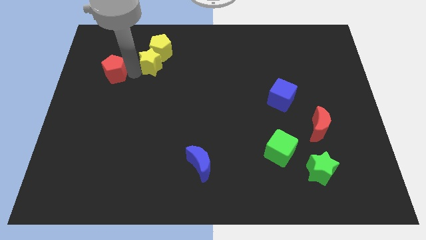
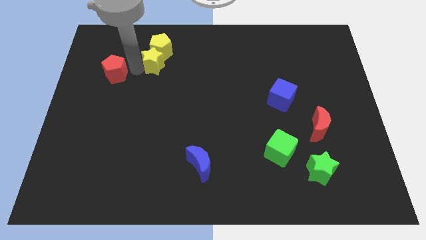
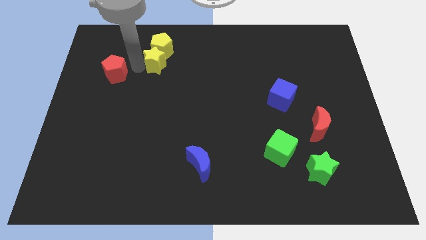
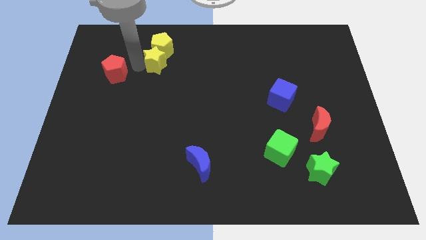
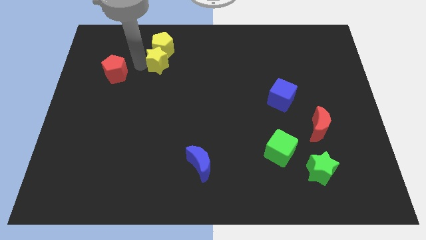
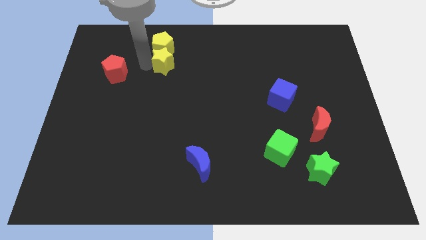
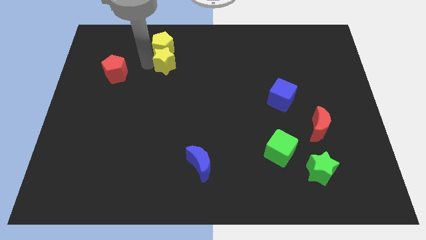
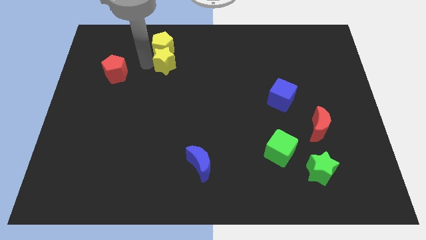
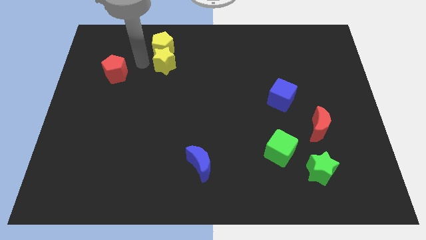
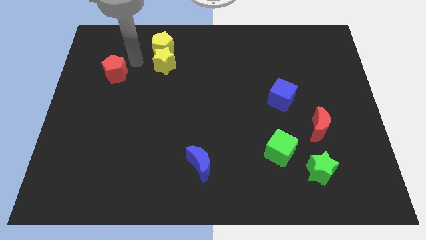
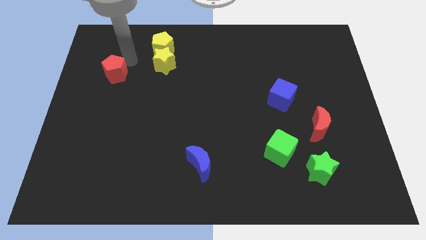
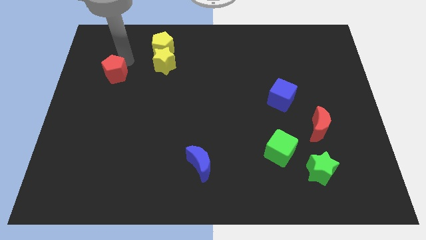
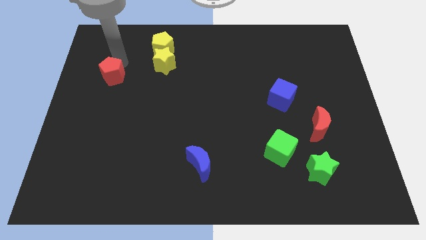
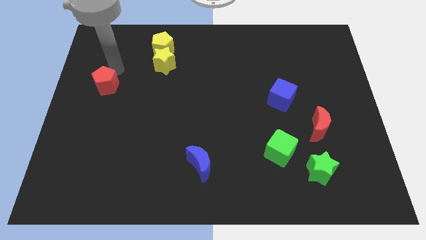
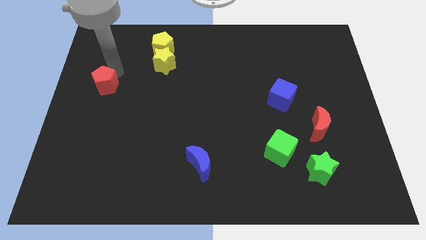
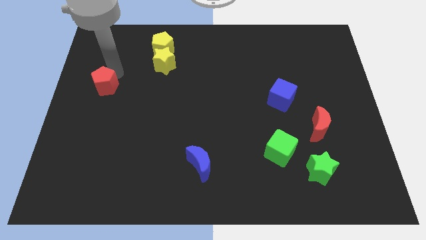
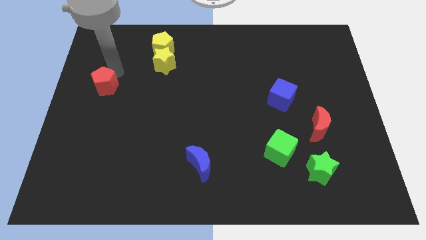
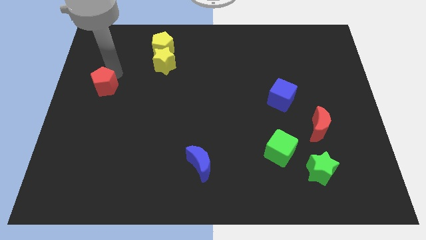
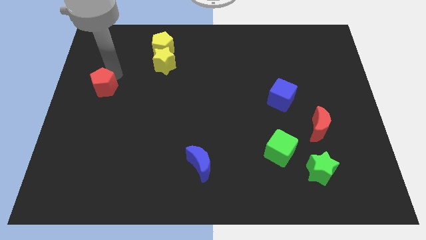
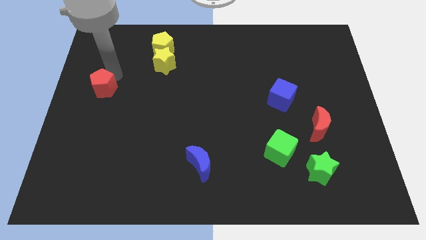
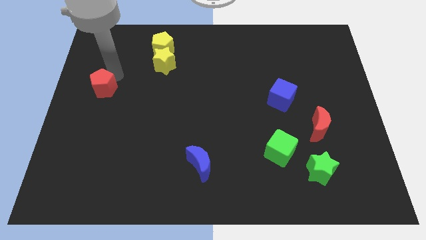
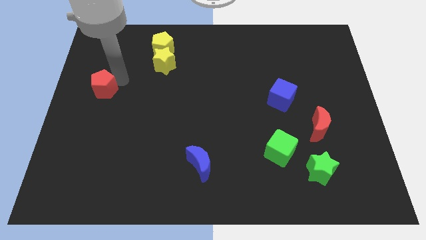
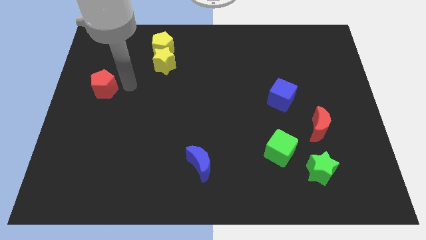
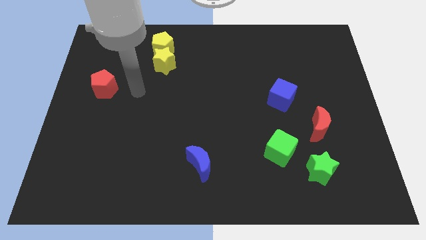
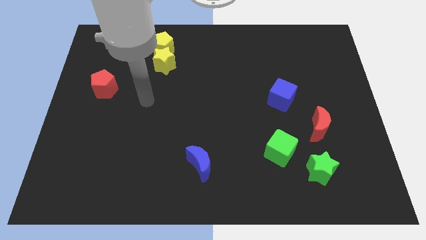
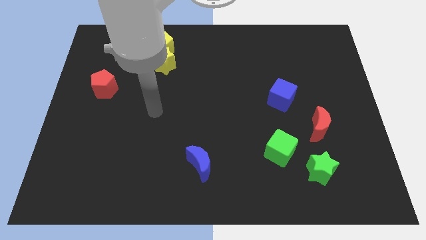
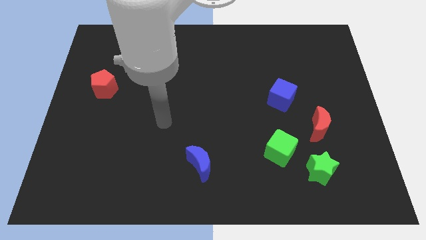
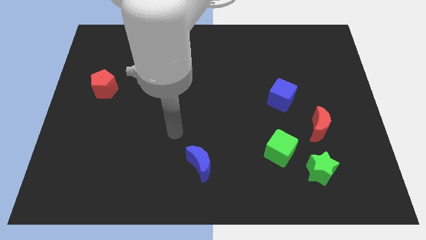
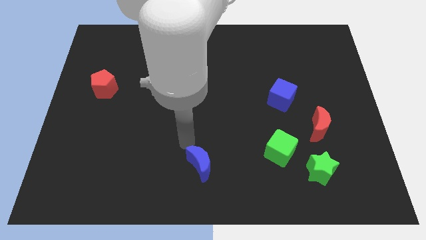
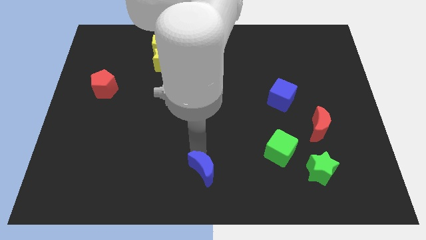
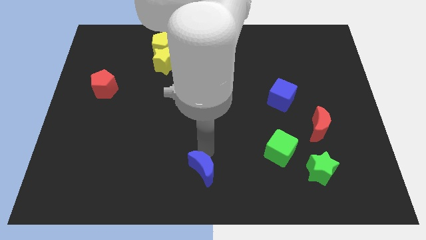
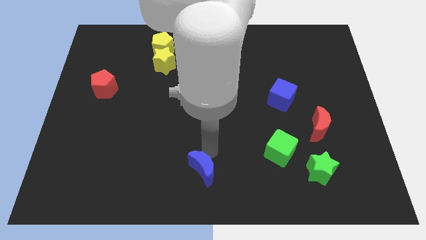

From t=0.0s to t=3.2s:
slide the red pentagon towards the left of the board

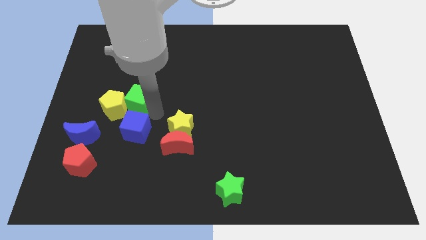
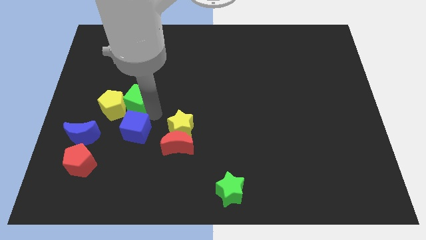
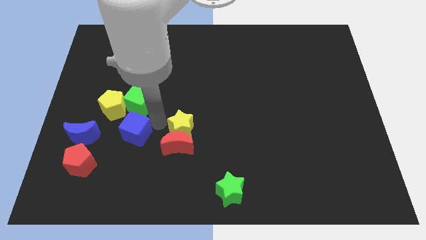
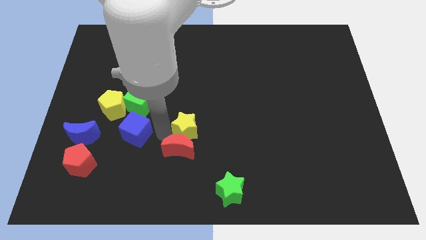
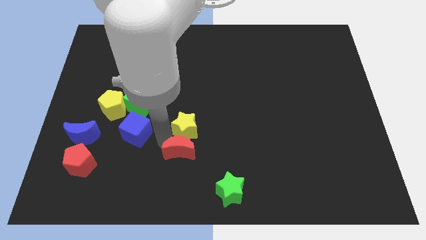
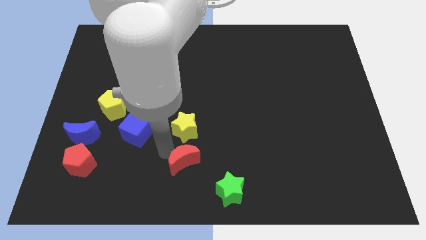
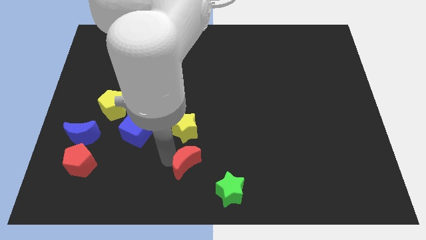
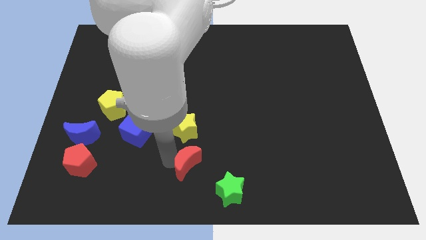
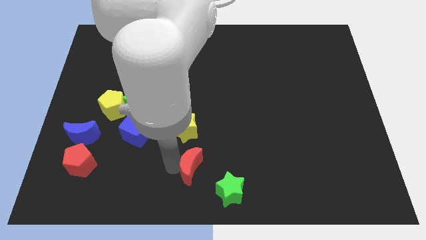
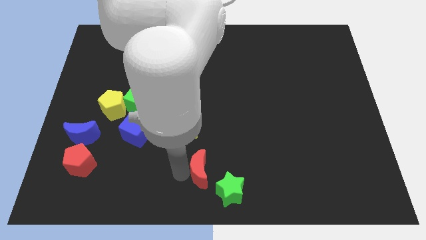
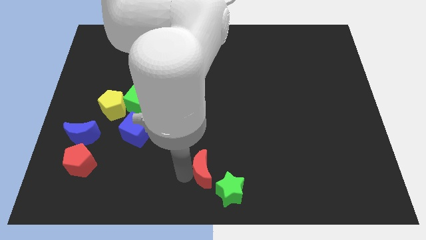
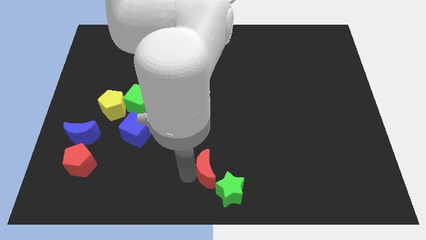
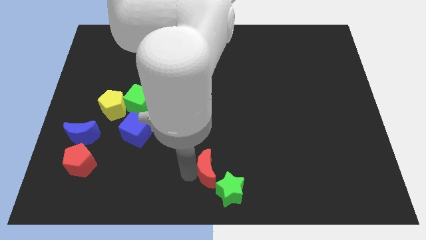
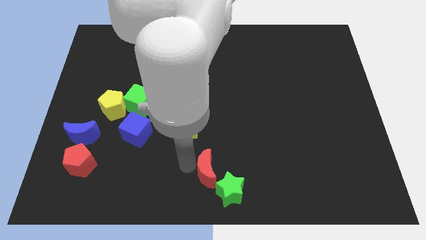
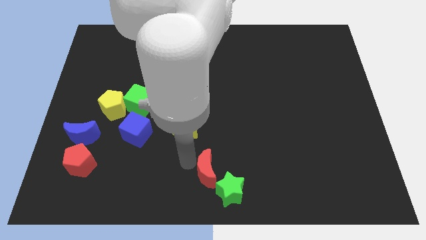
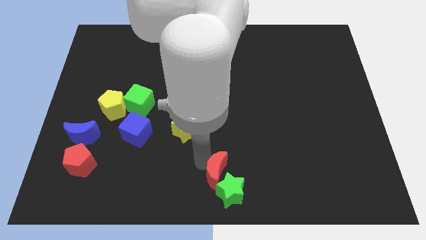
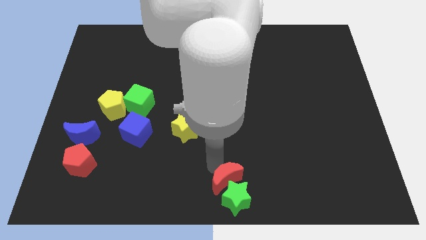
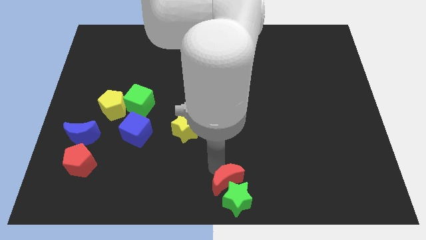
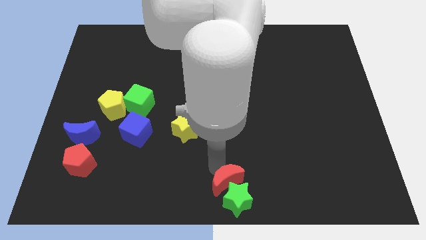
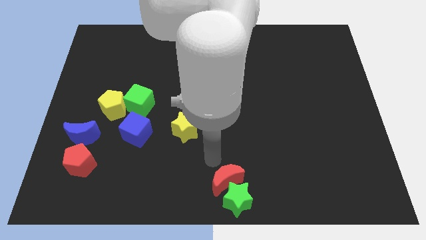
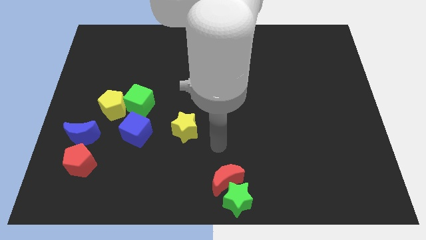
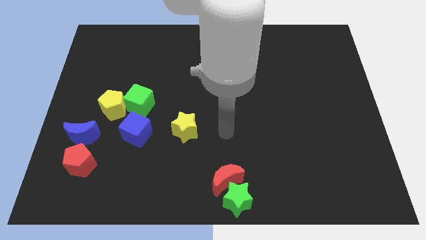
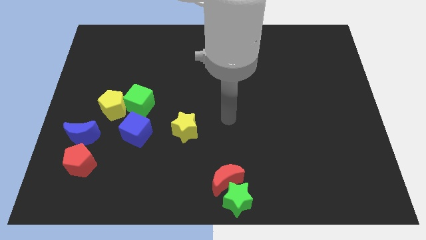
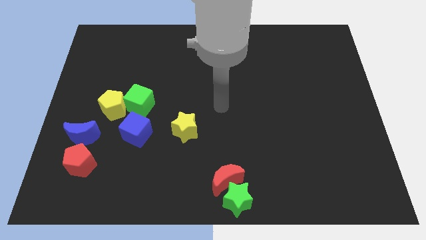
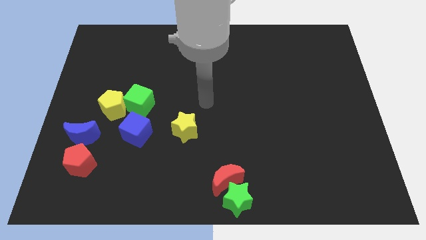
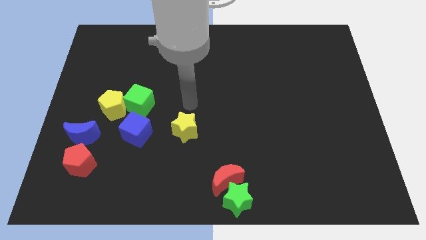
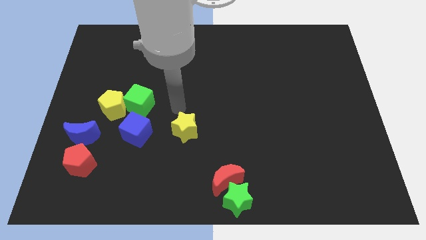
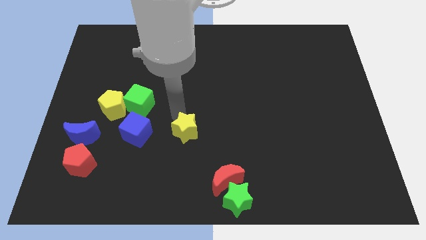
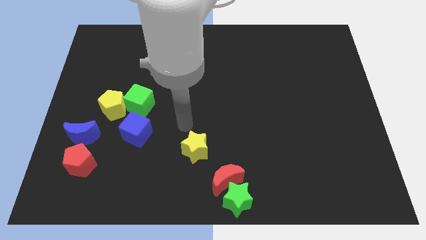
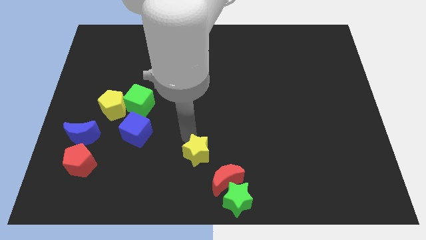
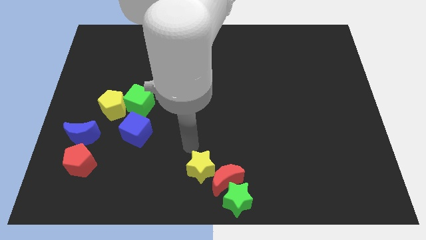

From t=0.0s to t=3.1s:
move the red crescent towards the upper side of the green star at the bottom center

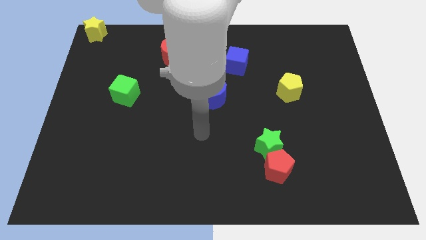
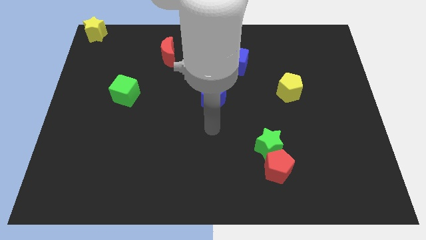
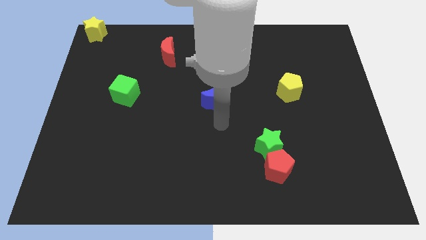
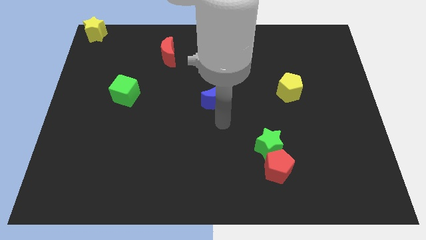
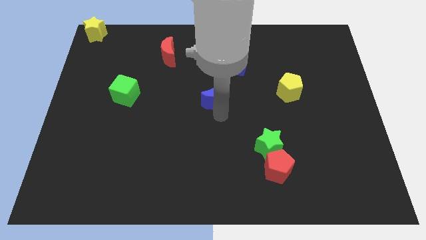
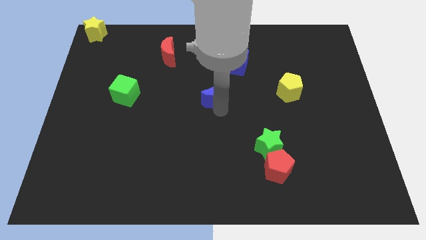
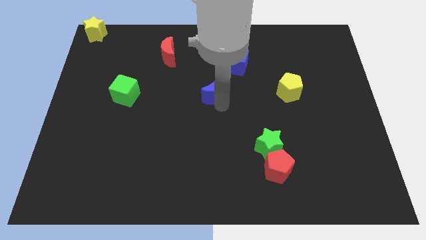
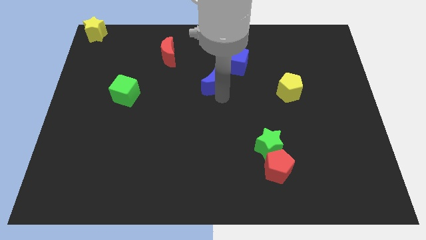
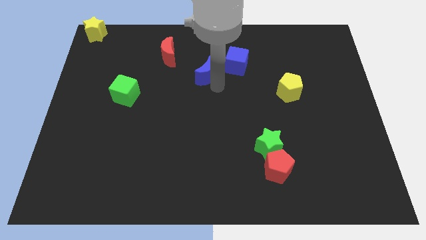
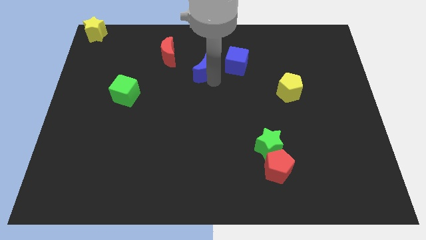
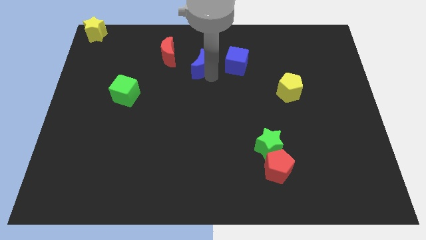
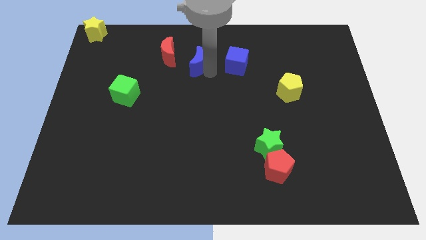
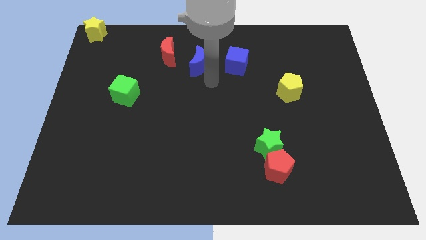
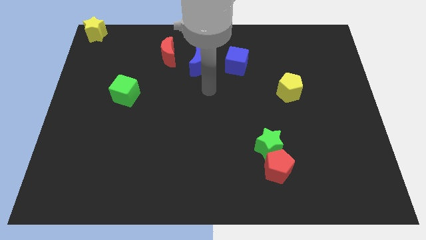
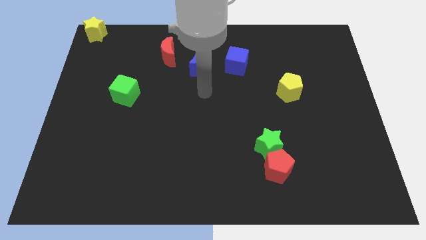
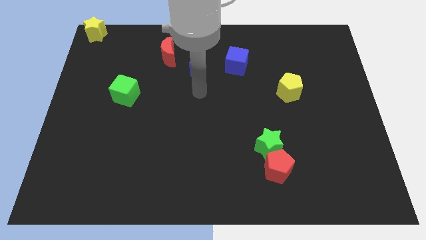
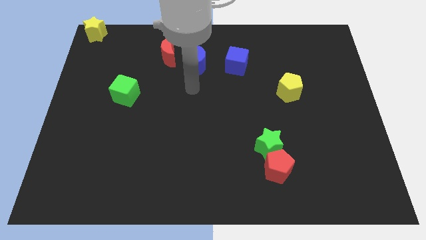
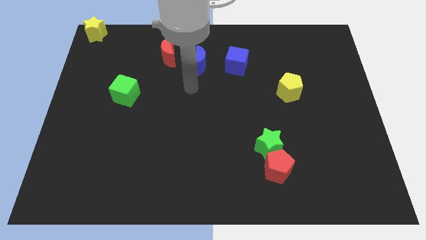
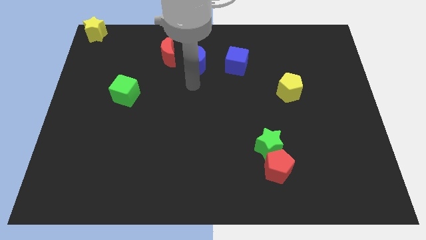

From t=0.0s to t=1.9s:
move the blue moon left to the blue cube

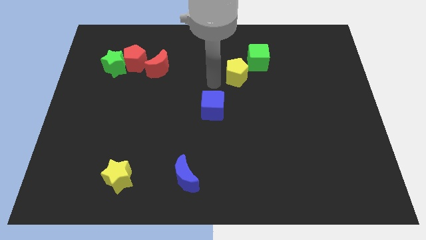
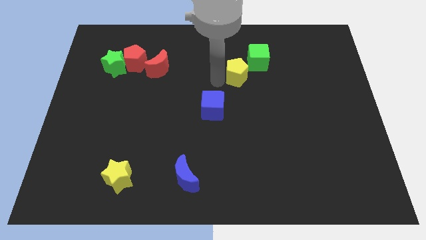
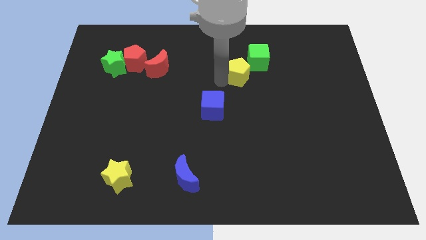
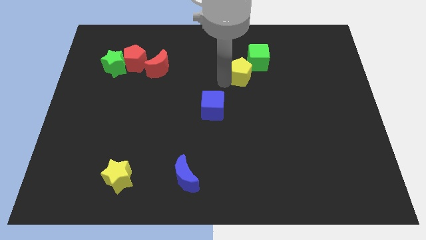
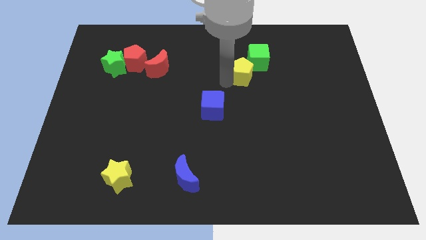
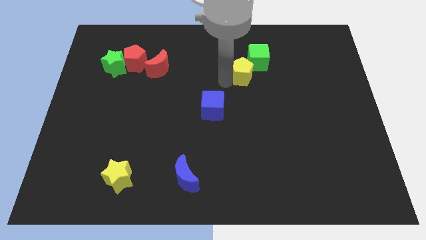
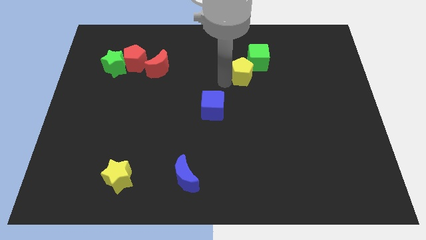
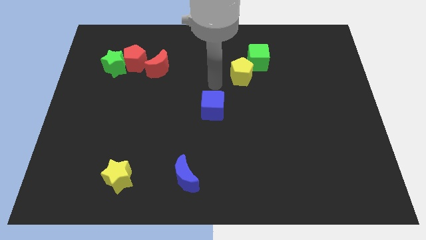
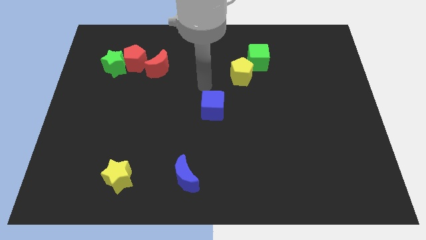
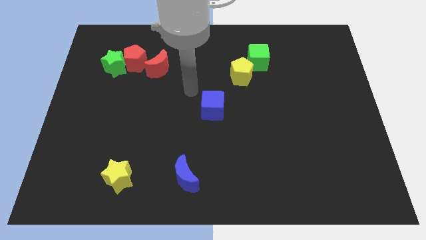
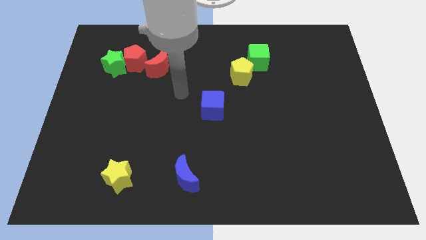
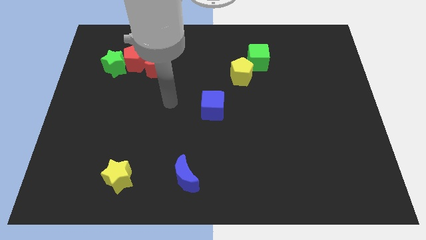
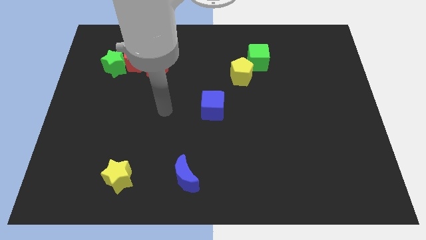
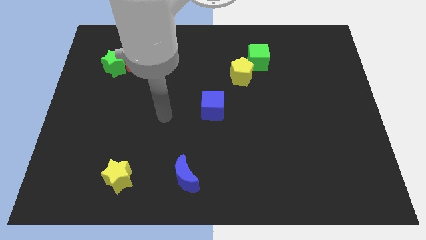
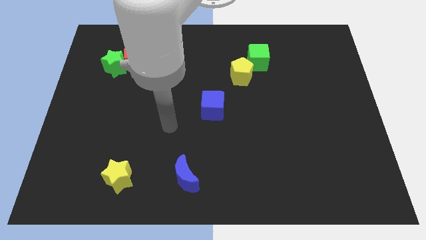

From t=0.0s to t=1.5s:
place yellow pentagon to down left corner of green cube
